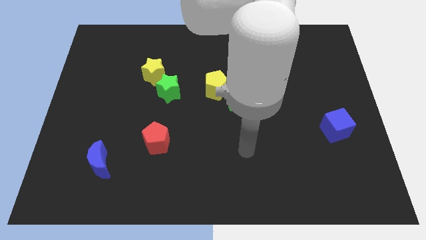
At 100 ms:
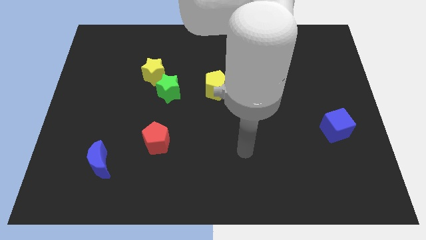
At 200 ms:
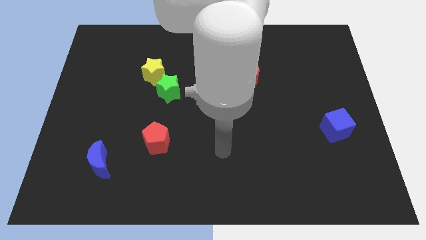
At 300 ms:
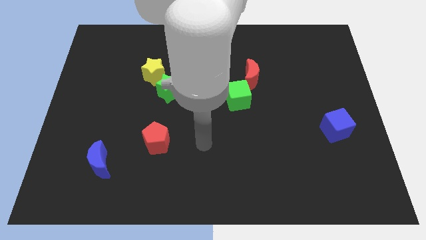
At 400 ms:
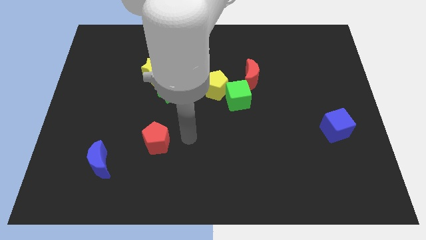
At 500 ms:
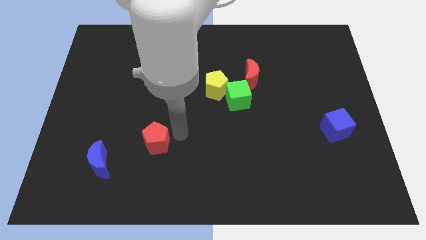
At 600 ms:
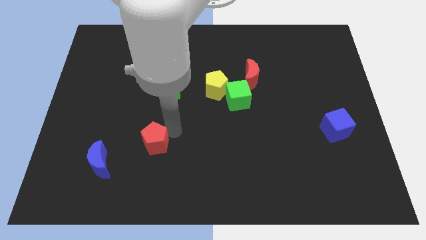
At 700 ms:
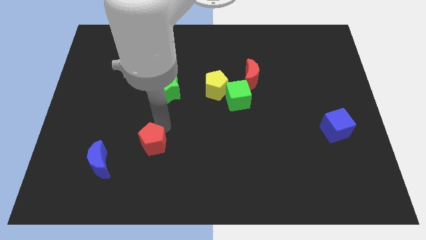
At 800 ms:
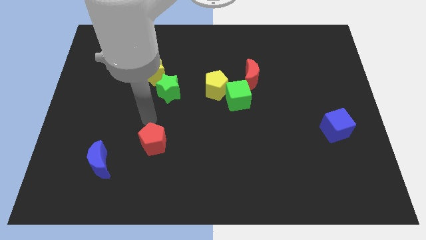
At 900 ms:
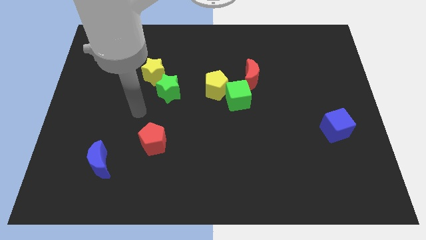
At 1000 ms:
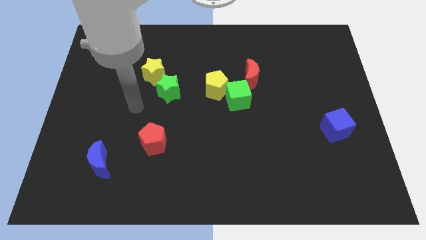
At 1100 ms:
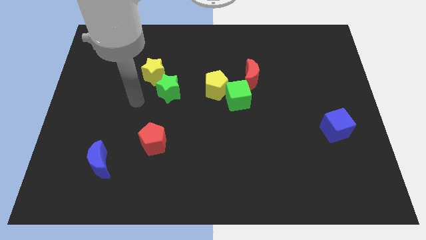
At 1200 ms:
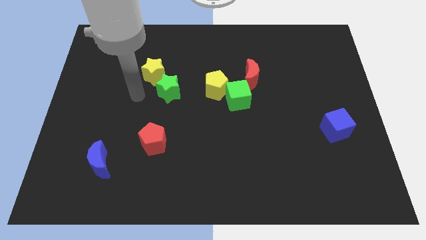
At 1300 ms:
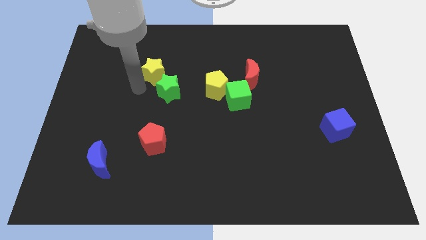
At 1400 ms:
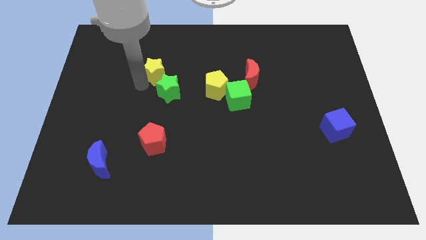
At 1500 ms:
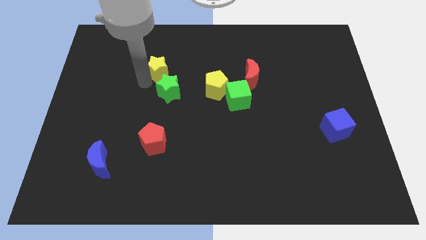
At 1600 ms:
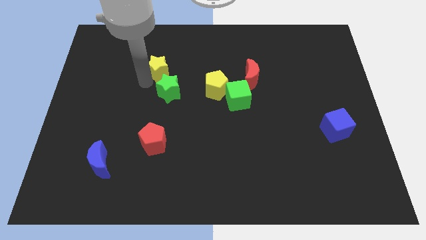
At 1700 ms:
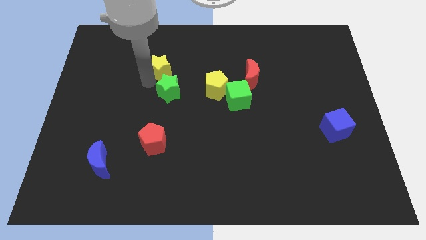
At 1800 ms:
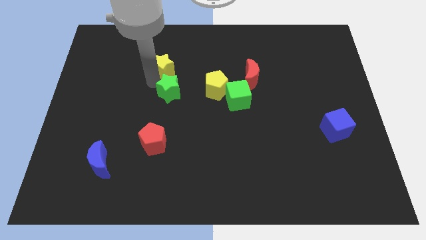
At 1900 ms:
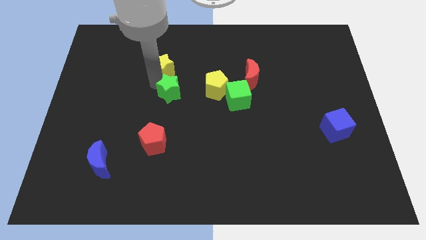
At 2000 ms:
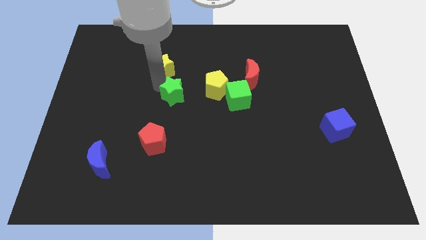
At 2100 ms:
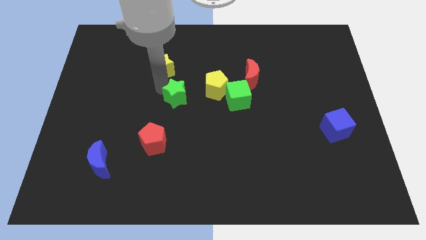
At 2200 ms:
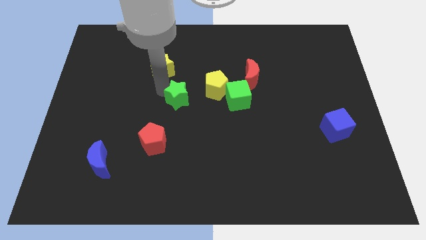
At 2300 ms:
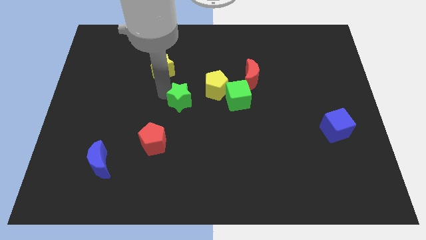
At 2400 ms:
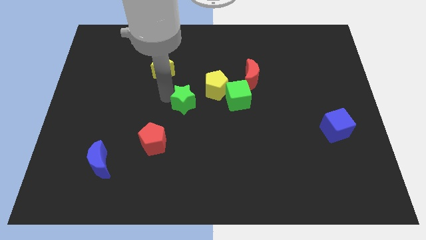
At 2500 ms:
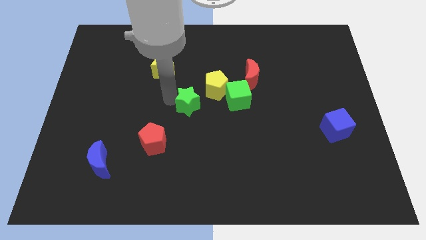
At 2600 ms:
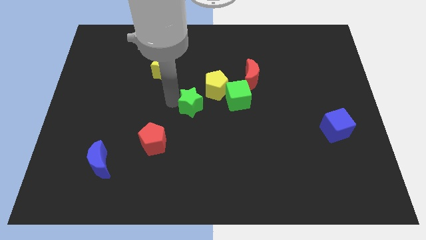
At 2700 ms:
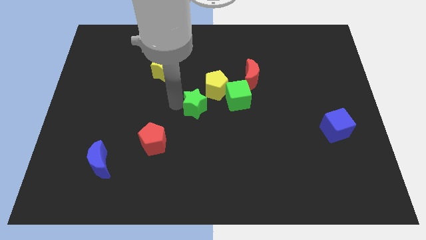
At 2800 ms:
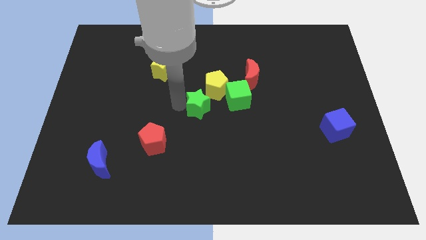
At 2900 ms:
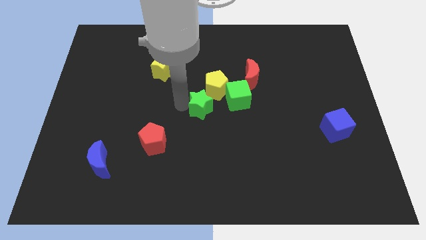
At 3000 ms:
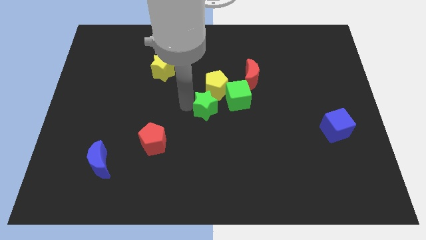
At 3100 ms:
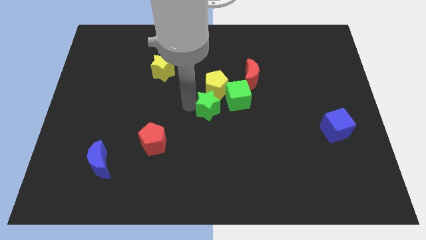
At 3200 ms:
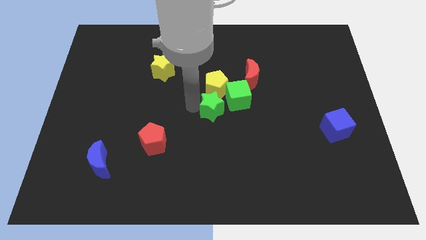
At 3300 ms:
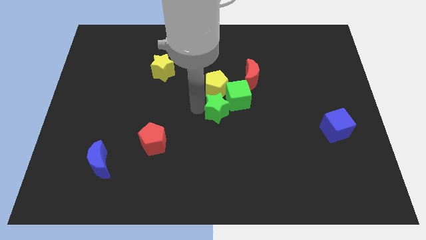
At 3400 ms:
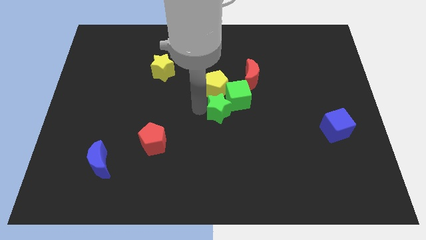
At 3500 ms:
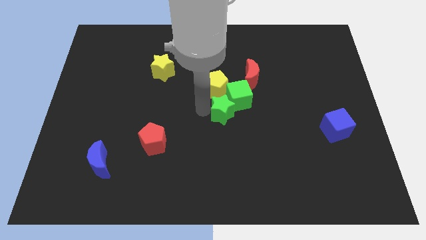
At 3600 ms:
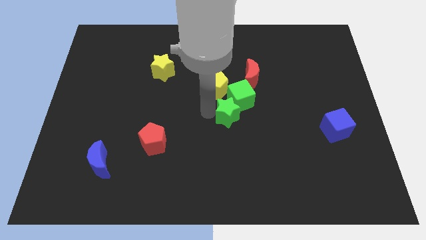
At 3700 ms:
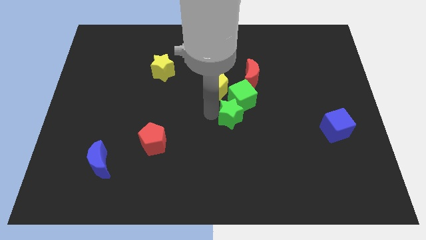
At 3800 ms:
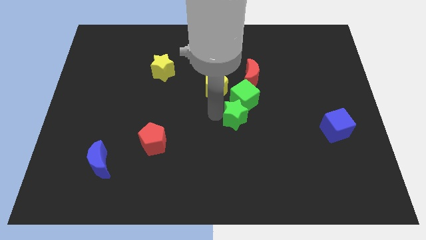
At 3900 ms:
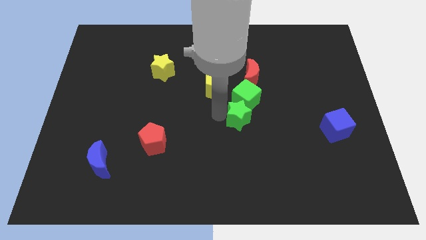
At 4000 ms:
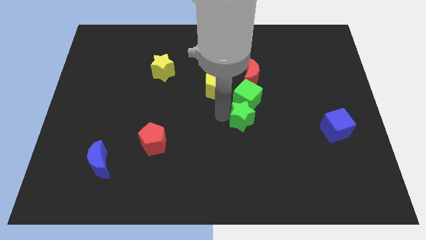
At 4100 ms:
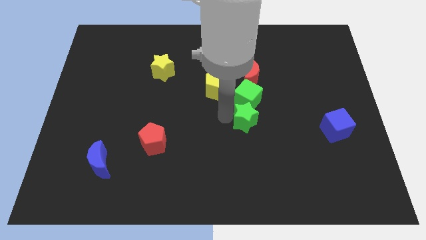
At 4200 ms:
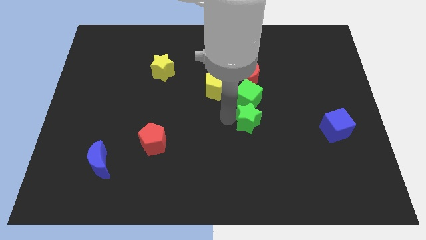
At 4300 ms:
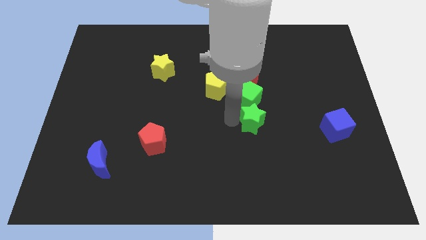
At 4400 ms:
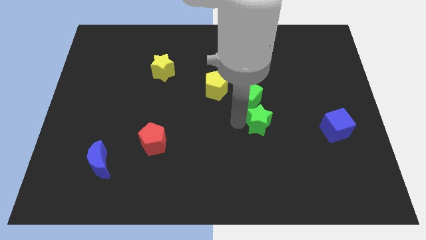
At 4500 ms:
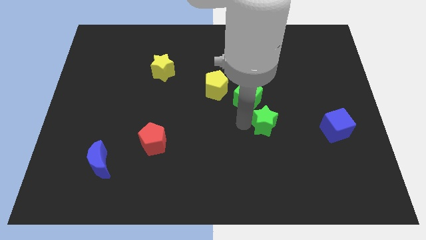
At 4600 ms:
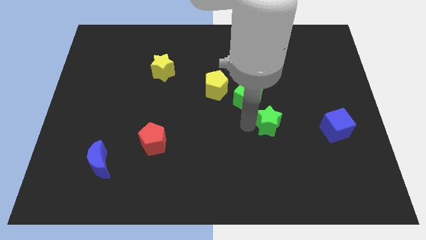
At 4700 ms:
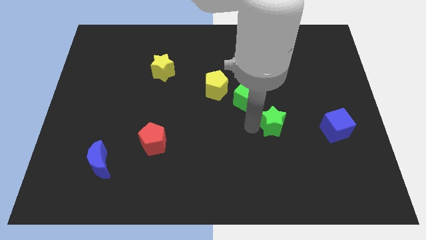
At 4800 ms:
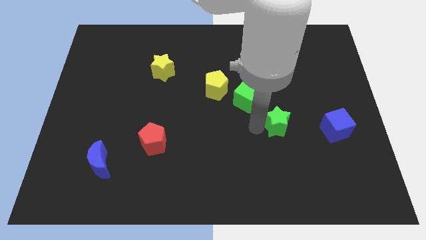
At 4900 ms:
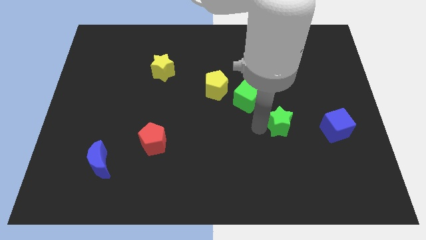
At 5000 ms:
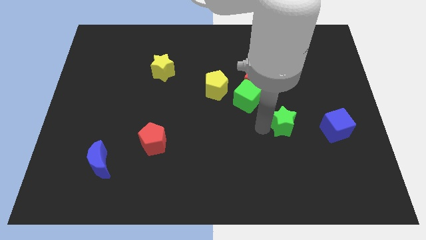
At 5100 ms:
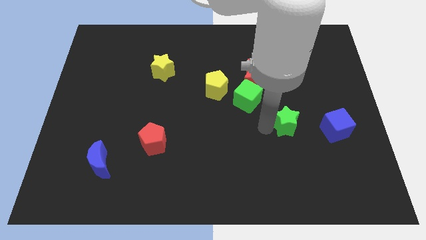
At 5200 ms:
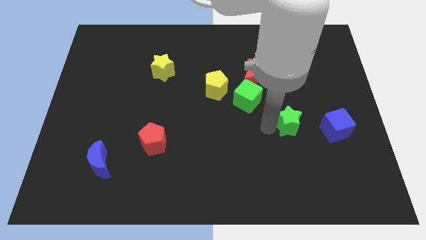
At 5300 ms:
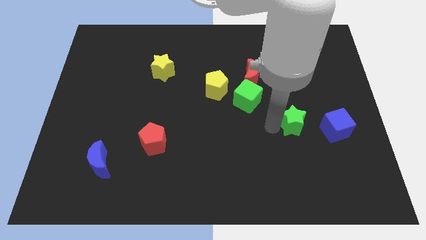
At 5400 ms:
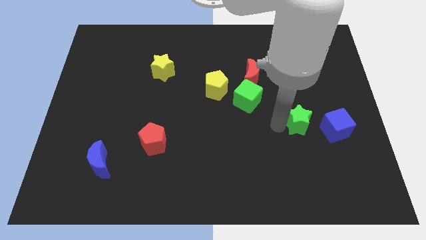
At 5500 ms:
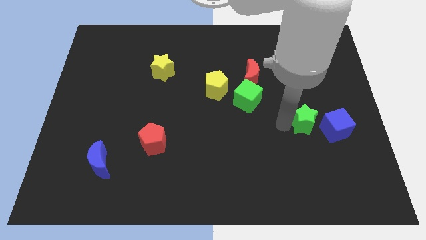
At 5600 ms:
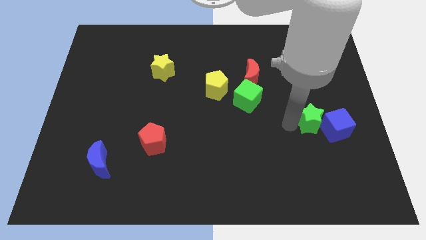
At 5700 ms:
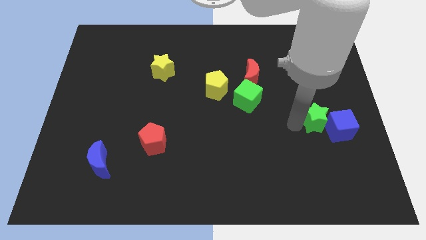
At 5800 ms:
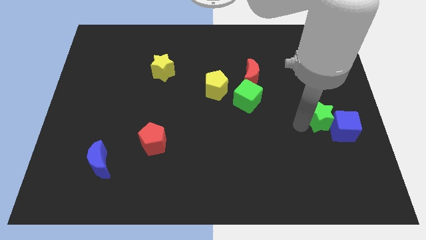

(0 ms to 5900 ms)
move the green star to the blue cube

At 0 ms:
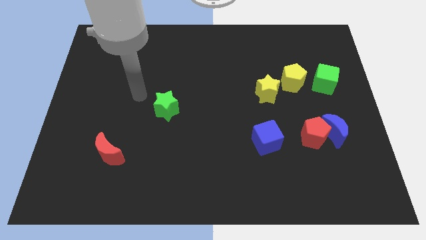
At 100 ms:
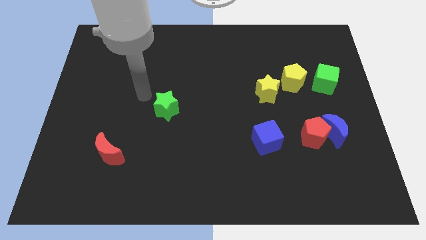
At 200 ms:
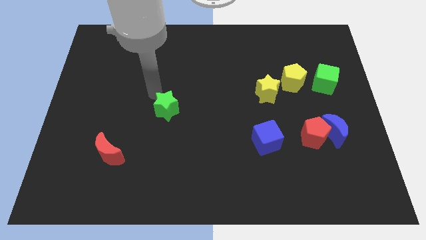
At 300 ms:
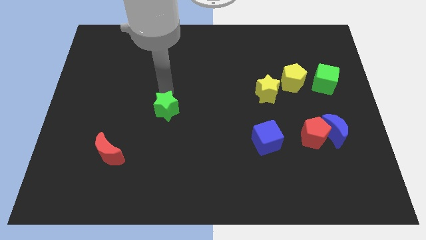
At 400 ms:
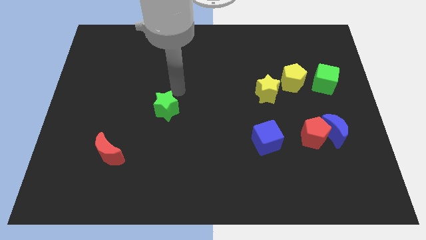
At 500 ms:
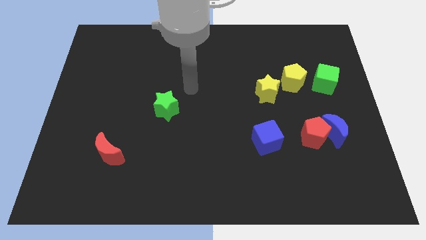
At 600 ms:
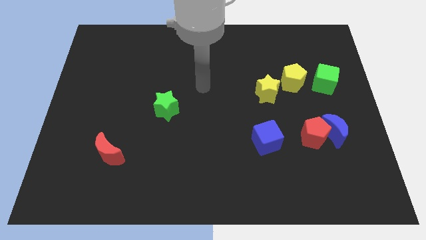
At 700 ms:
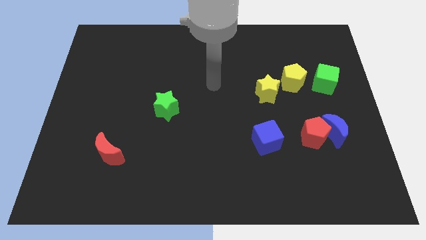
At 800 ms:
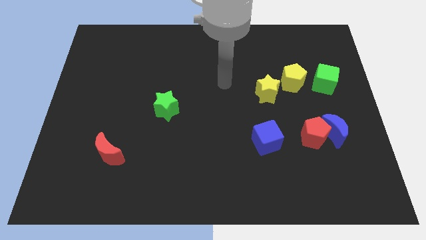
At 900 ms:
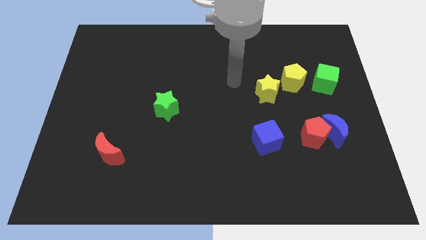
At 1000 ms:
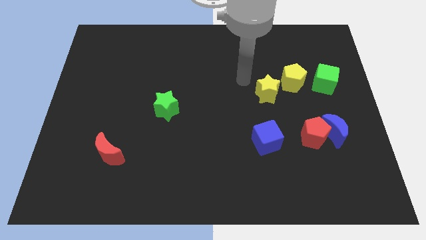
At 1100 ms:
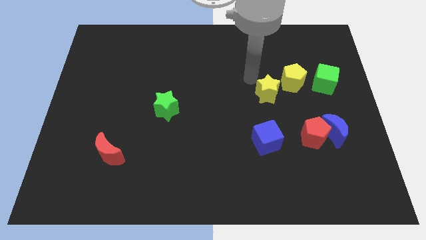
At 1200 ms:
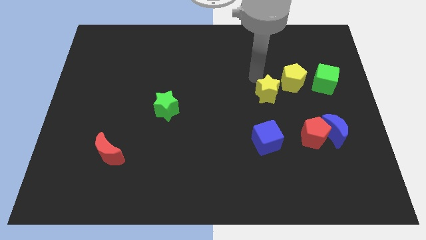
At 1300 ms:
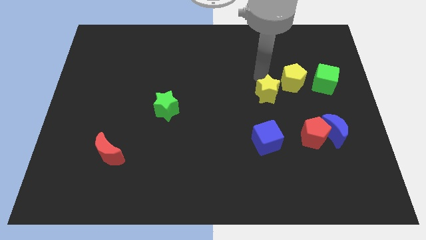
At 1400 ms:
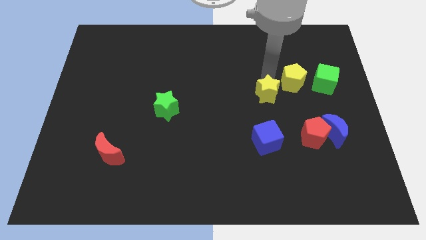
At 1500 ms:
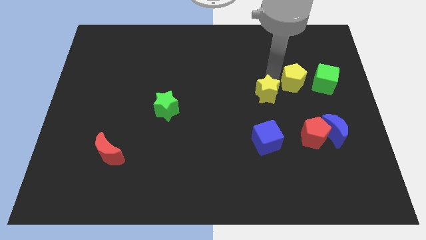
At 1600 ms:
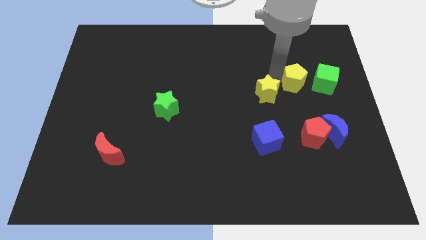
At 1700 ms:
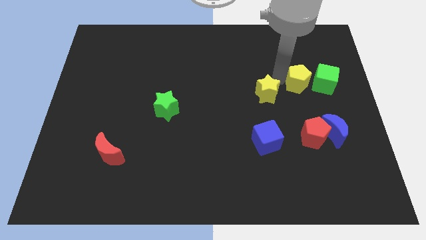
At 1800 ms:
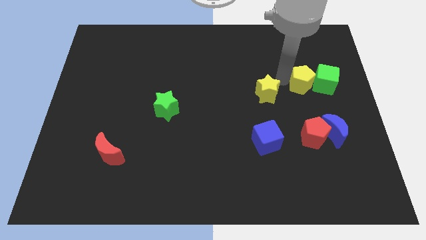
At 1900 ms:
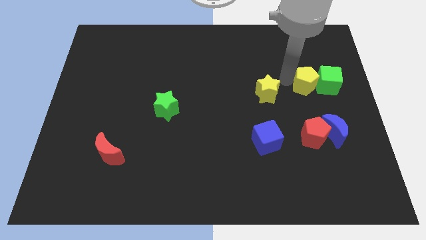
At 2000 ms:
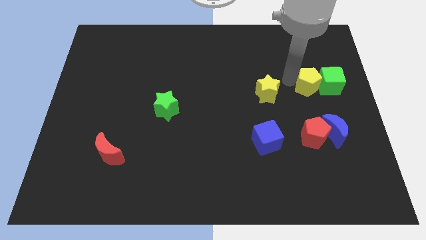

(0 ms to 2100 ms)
push the yellow pentagon close to the green cube

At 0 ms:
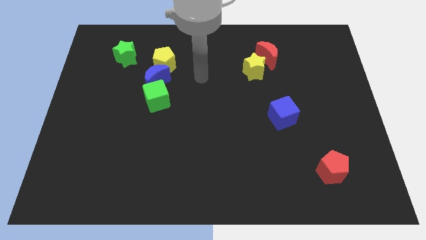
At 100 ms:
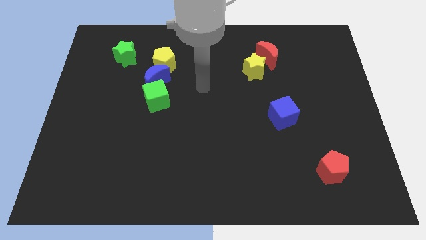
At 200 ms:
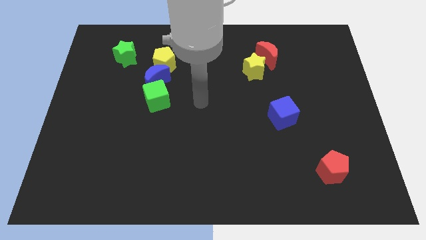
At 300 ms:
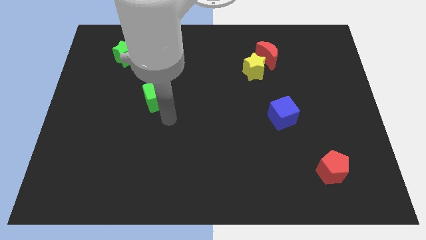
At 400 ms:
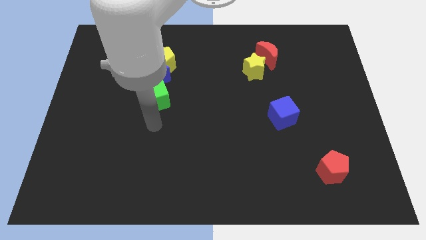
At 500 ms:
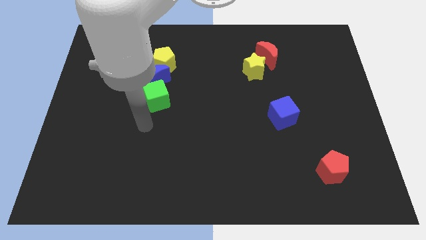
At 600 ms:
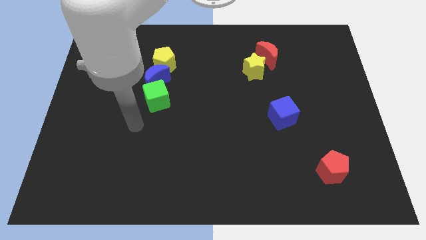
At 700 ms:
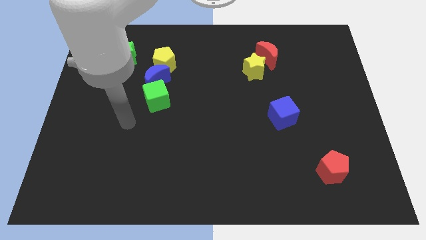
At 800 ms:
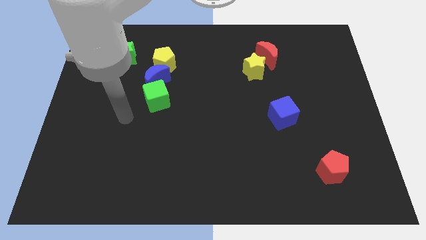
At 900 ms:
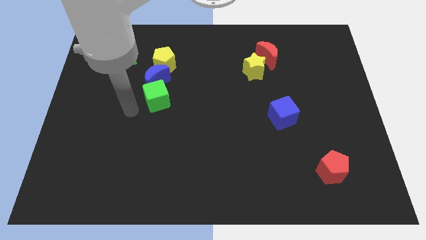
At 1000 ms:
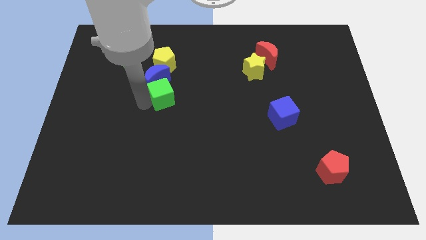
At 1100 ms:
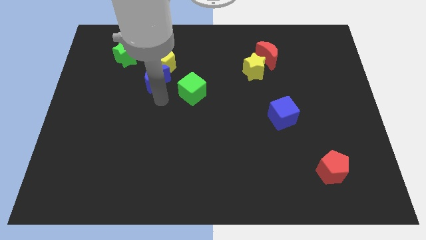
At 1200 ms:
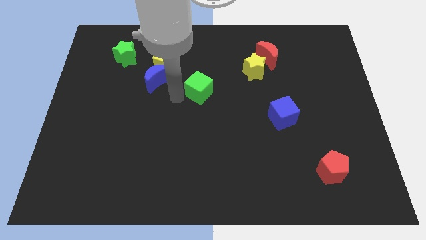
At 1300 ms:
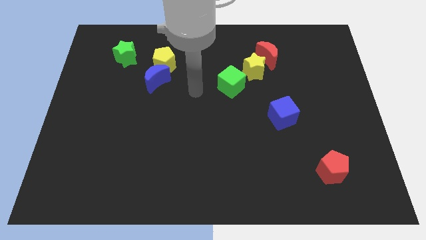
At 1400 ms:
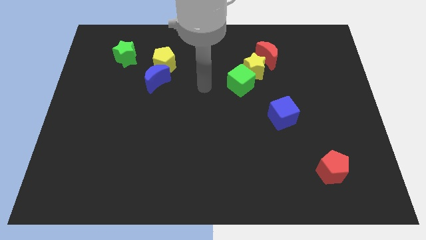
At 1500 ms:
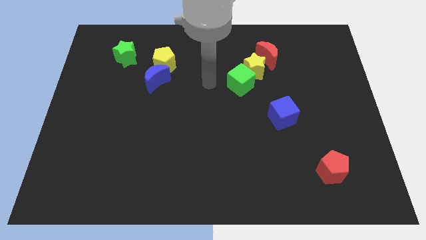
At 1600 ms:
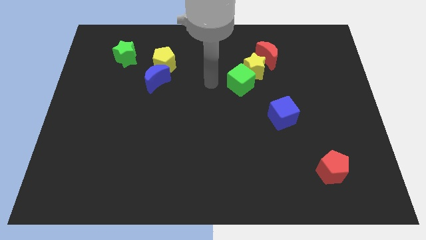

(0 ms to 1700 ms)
push the green cube to the yellow star
